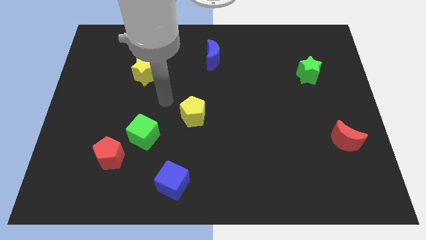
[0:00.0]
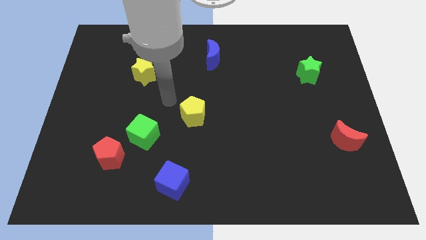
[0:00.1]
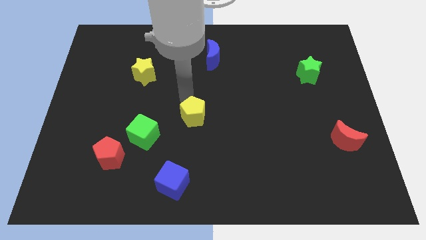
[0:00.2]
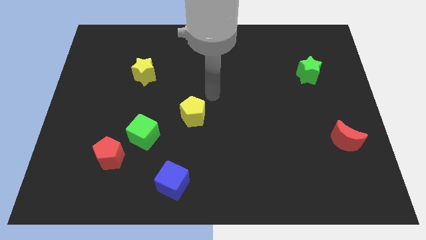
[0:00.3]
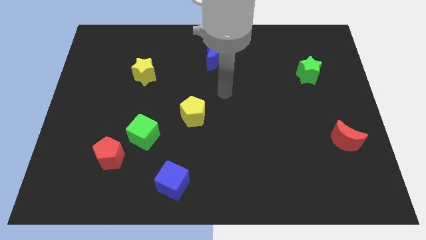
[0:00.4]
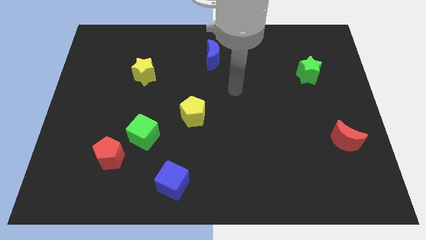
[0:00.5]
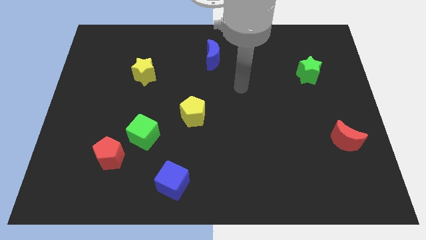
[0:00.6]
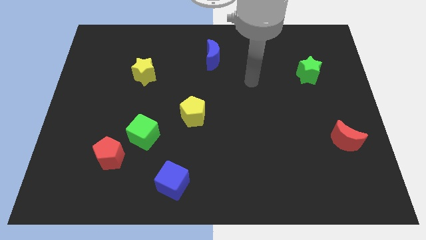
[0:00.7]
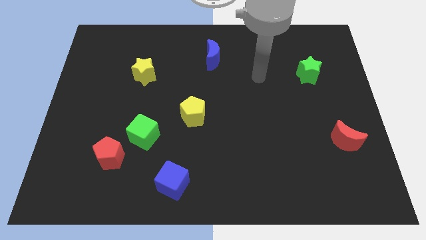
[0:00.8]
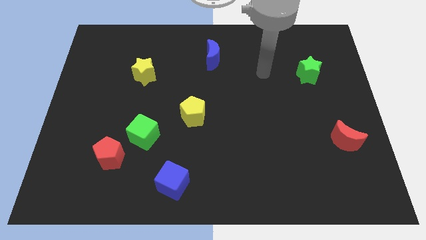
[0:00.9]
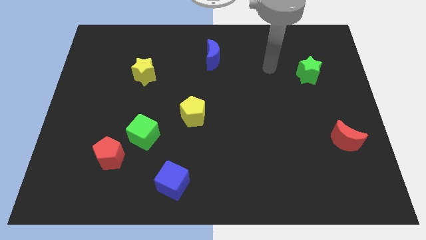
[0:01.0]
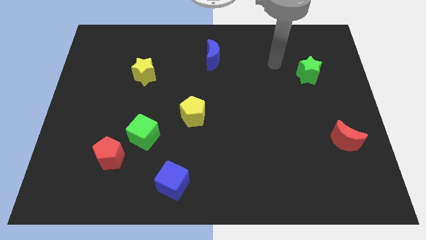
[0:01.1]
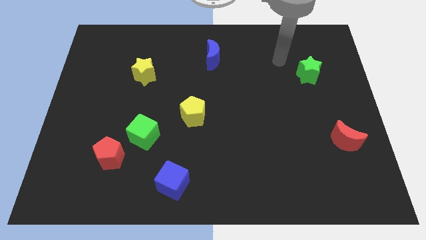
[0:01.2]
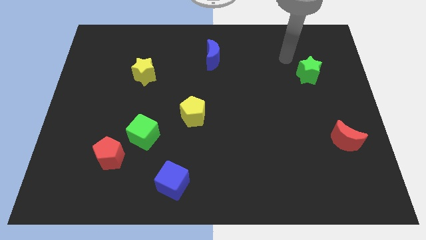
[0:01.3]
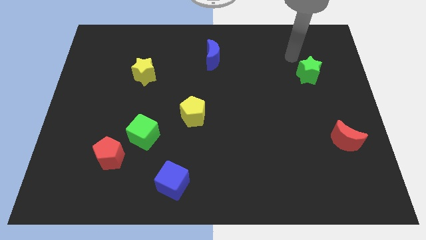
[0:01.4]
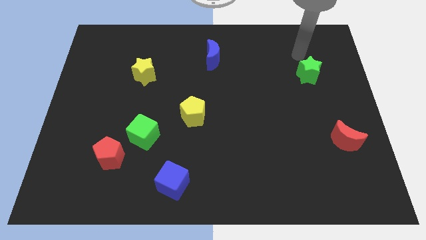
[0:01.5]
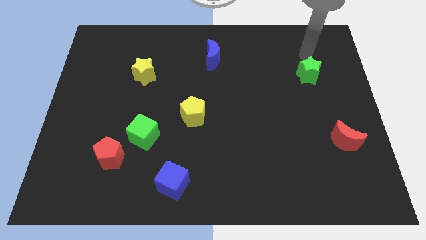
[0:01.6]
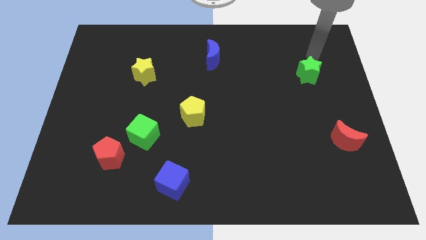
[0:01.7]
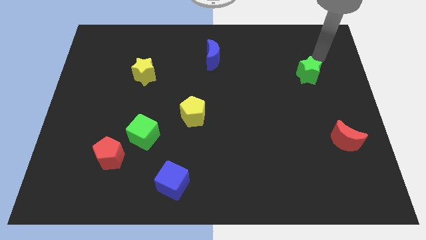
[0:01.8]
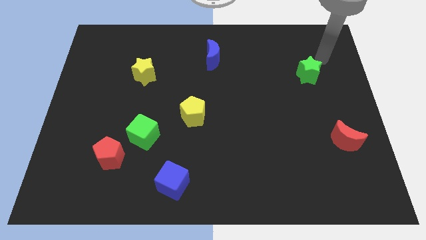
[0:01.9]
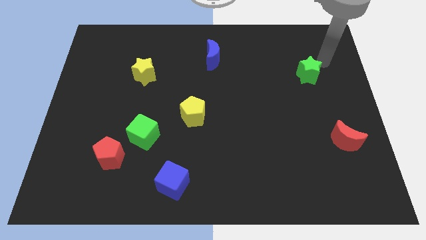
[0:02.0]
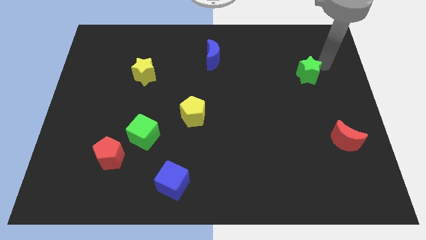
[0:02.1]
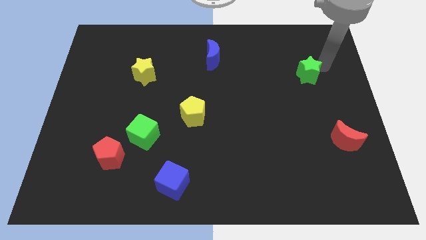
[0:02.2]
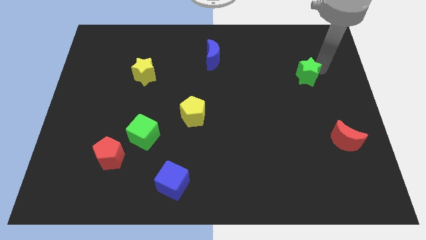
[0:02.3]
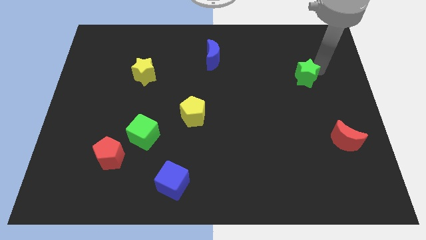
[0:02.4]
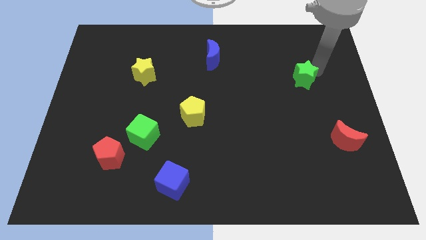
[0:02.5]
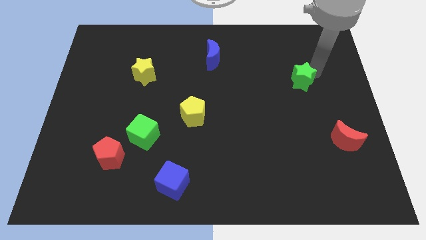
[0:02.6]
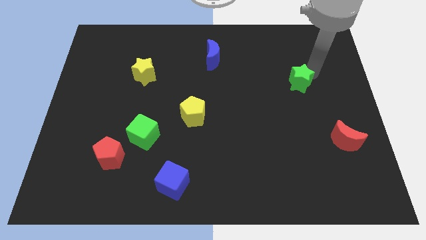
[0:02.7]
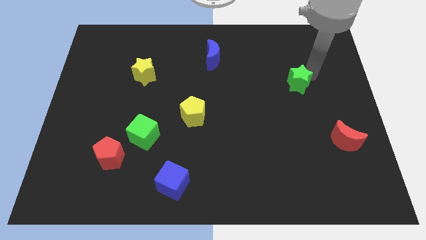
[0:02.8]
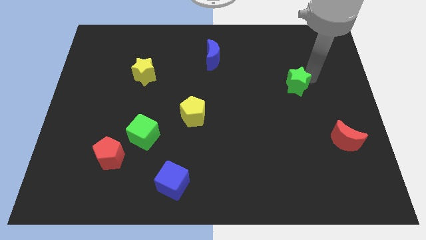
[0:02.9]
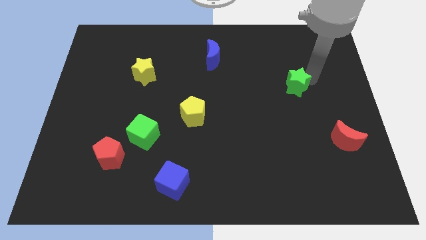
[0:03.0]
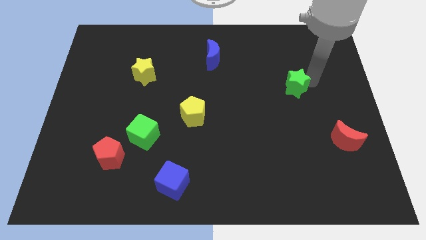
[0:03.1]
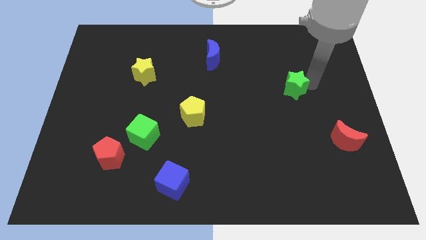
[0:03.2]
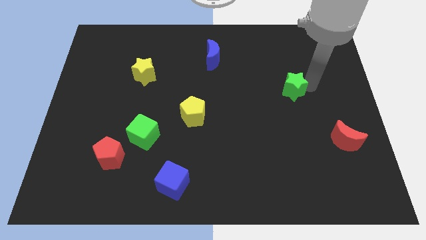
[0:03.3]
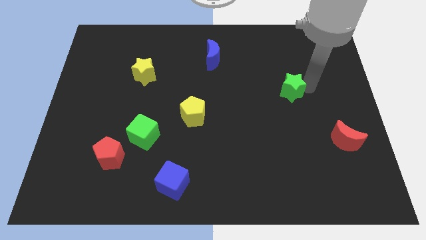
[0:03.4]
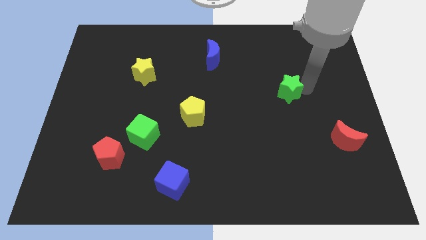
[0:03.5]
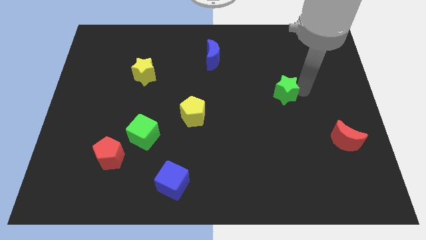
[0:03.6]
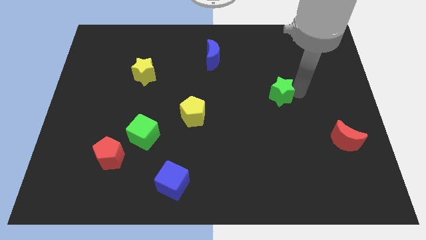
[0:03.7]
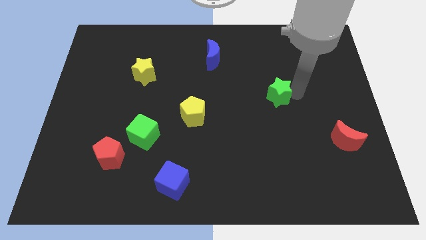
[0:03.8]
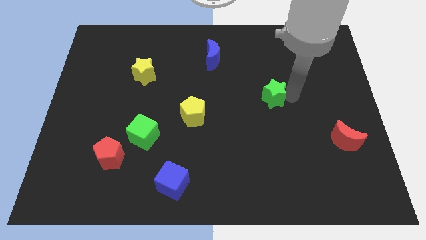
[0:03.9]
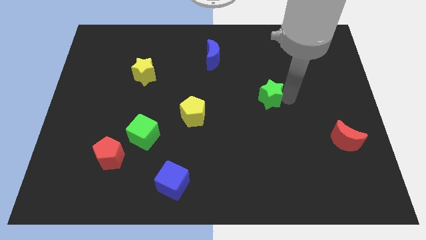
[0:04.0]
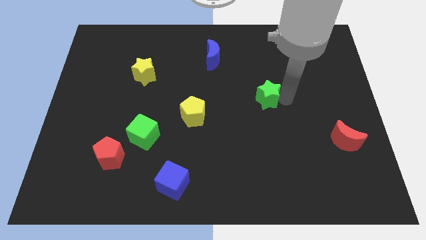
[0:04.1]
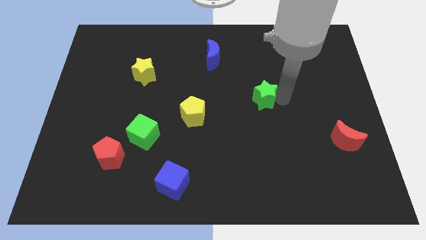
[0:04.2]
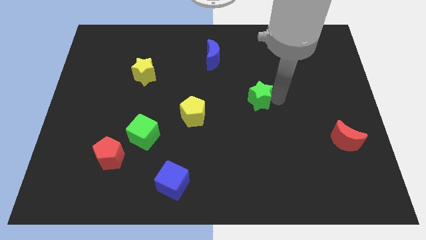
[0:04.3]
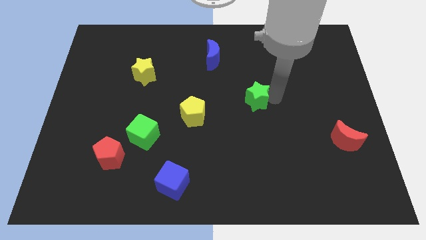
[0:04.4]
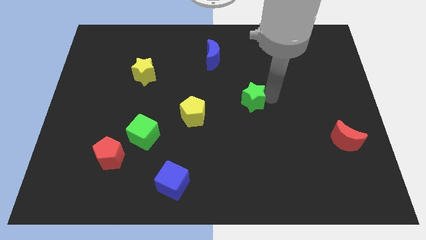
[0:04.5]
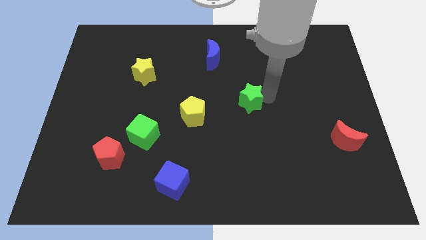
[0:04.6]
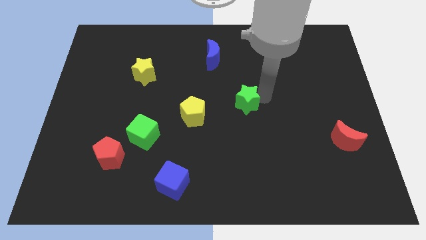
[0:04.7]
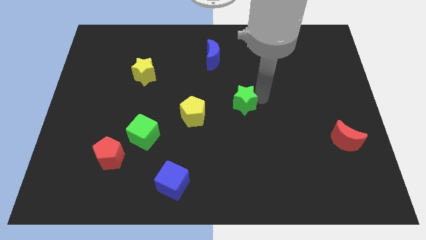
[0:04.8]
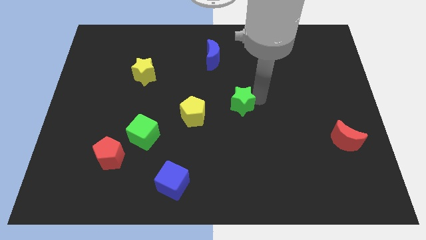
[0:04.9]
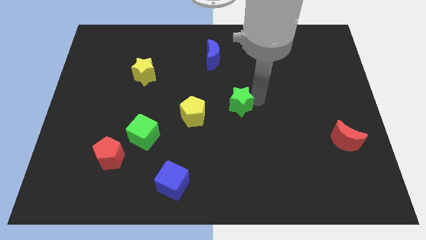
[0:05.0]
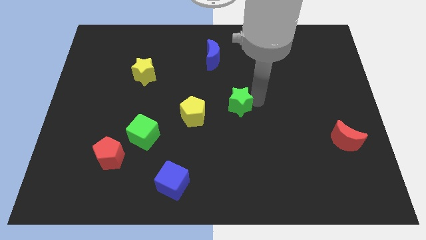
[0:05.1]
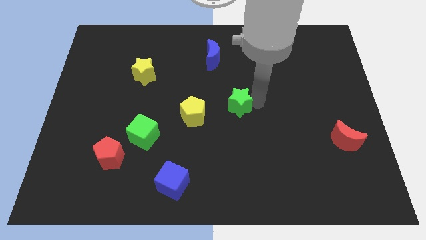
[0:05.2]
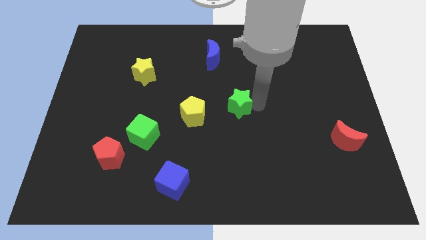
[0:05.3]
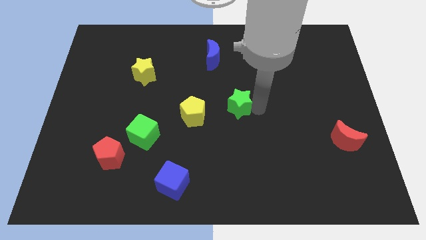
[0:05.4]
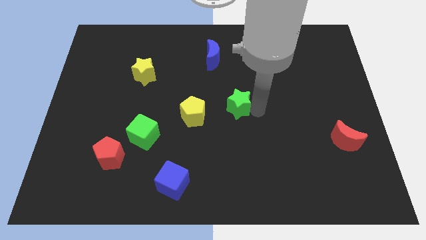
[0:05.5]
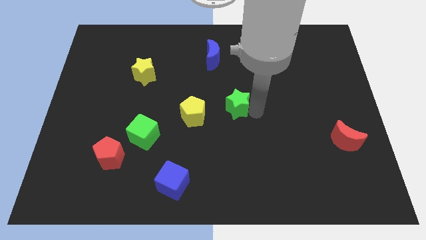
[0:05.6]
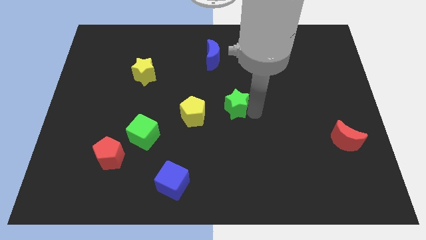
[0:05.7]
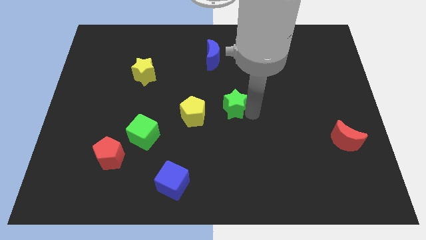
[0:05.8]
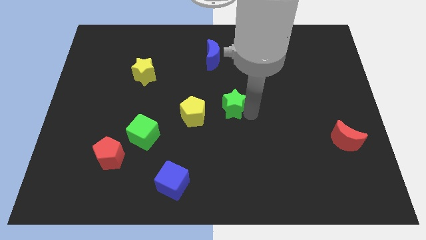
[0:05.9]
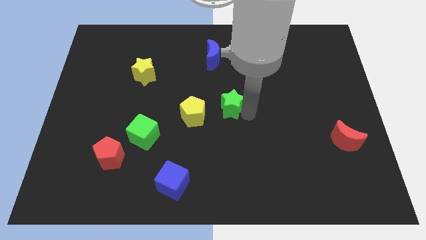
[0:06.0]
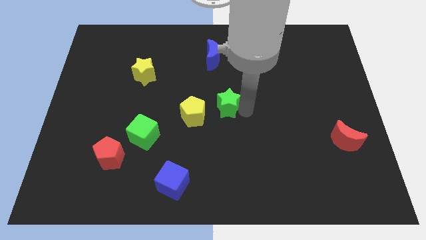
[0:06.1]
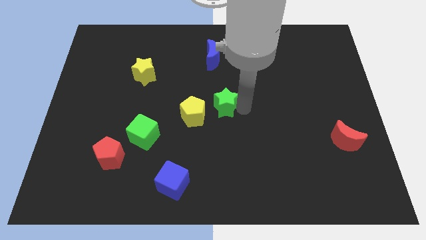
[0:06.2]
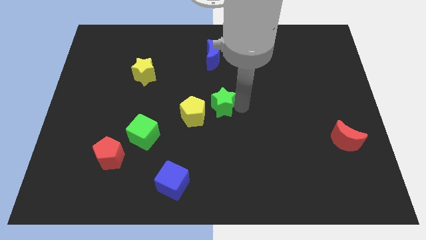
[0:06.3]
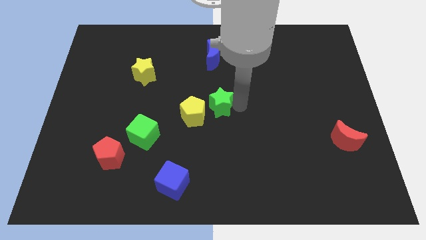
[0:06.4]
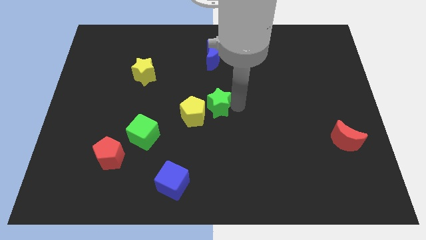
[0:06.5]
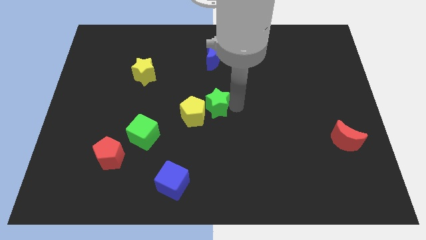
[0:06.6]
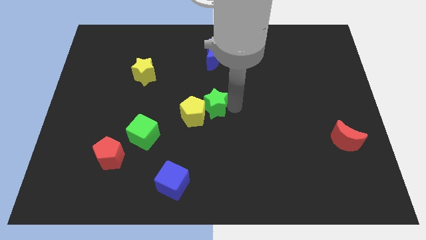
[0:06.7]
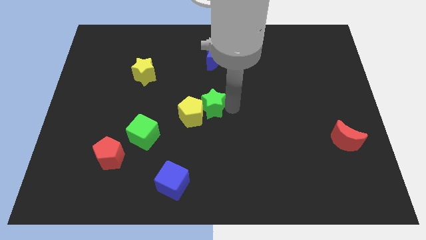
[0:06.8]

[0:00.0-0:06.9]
push the green star to the yellow pentagon

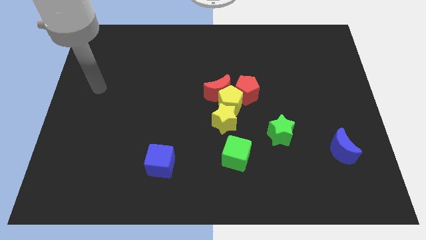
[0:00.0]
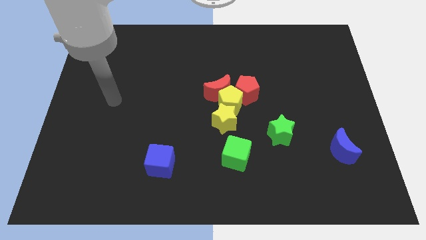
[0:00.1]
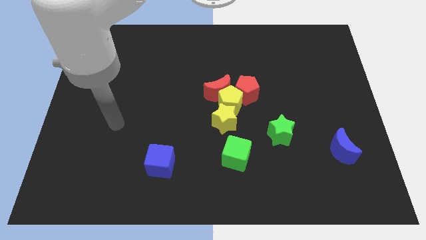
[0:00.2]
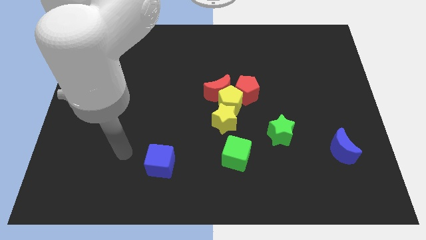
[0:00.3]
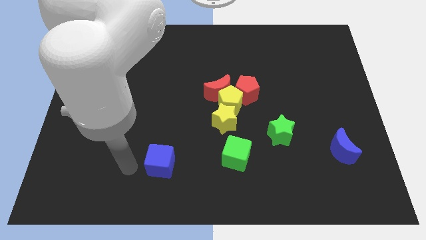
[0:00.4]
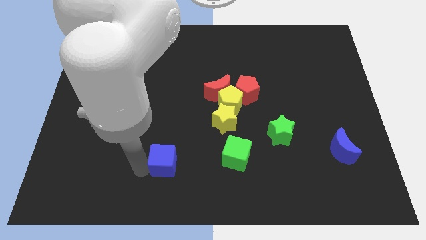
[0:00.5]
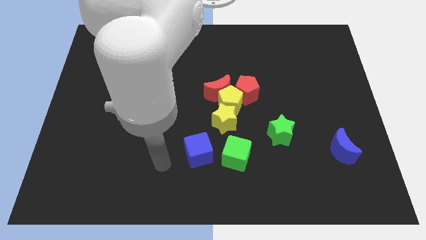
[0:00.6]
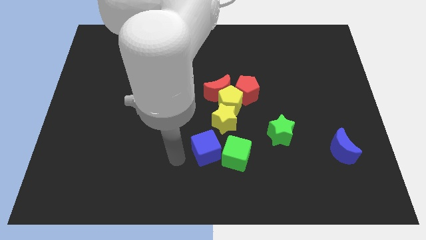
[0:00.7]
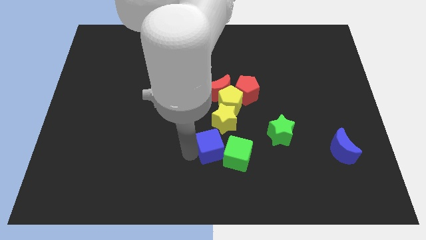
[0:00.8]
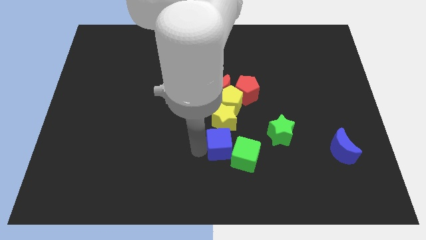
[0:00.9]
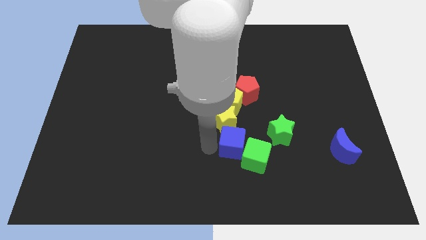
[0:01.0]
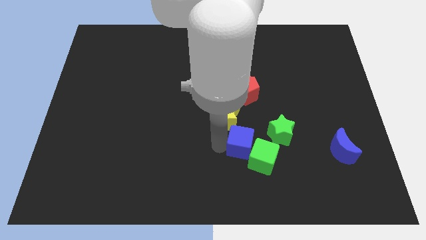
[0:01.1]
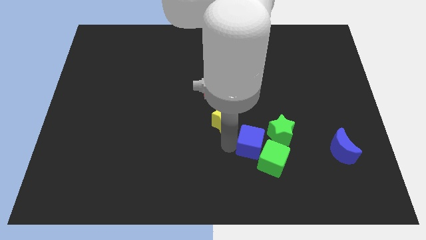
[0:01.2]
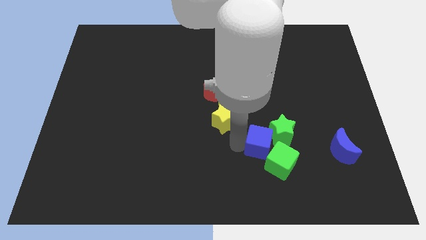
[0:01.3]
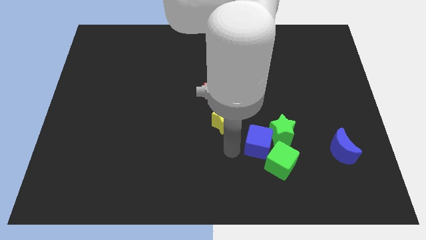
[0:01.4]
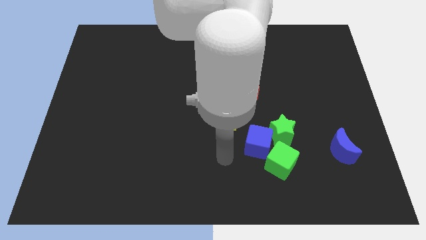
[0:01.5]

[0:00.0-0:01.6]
put the blue cube next to the green star
